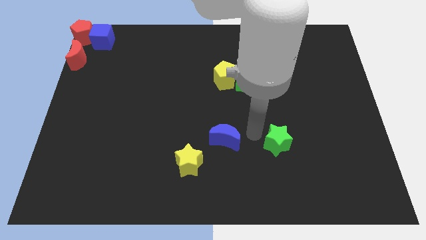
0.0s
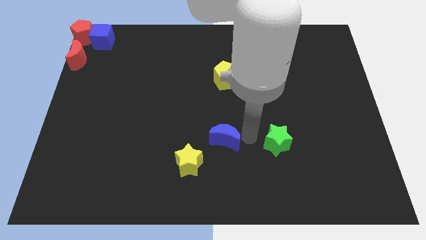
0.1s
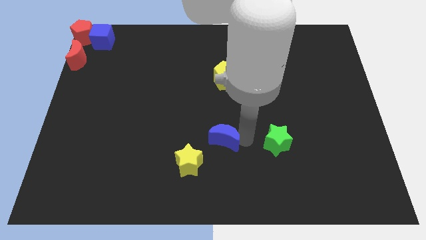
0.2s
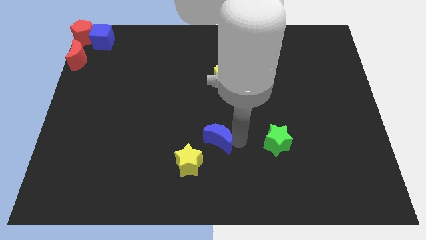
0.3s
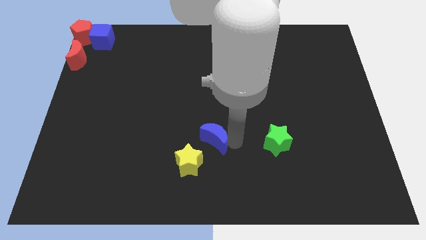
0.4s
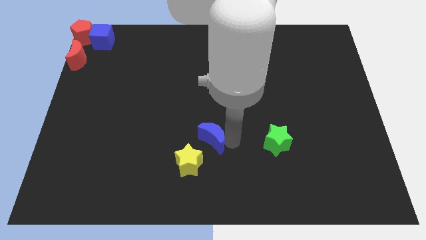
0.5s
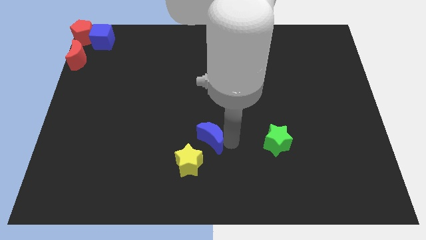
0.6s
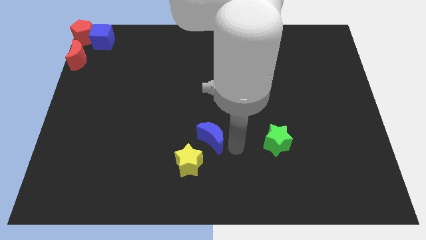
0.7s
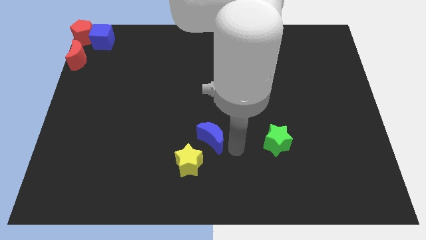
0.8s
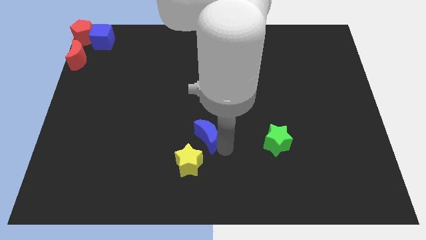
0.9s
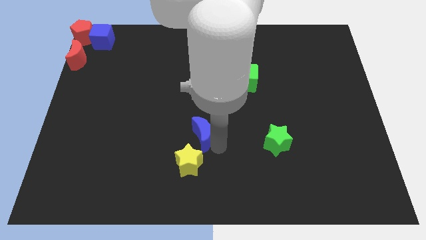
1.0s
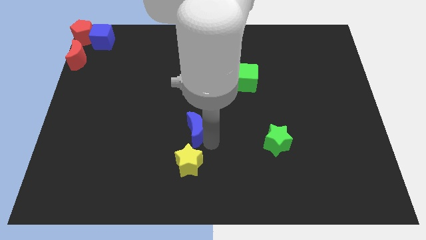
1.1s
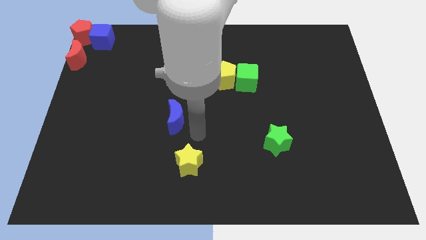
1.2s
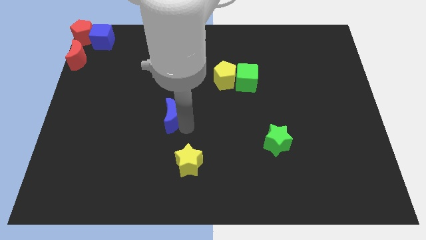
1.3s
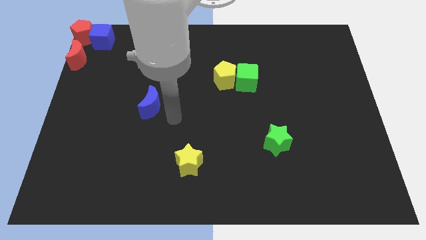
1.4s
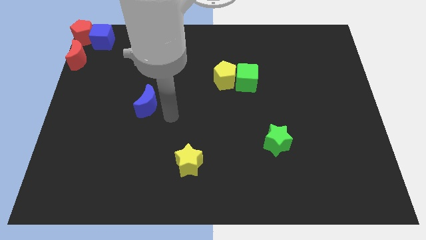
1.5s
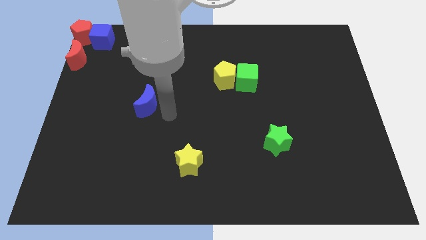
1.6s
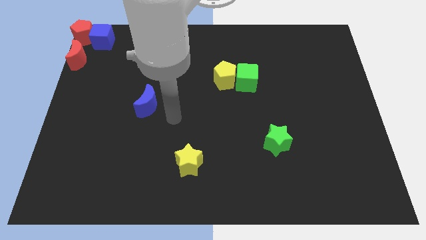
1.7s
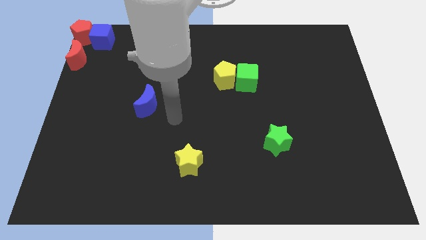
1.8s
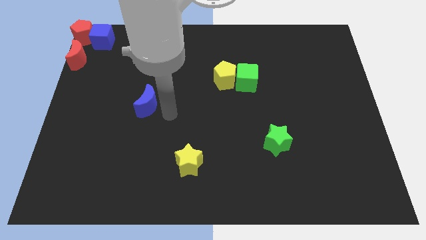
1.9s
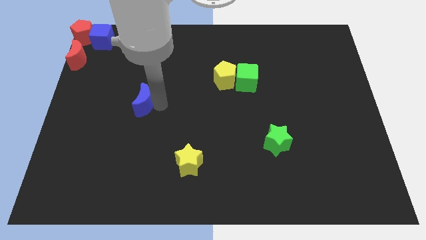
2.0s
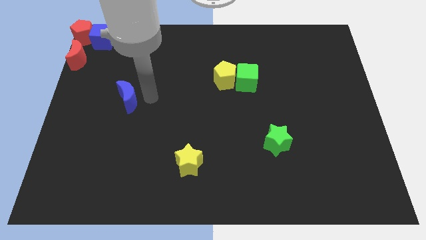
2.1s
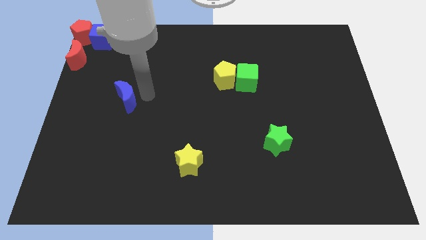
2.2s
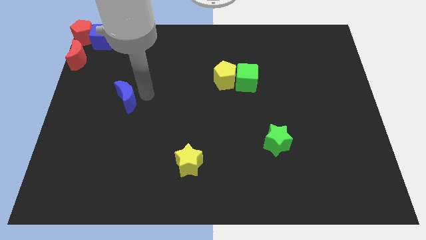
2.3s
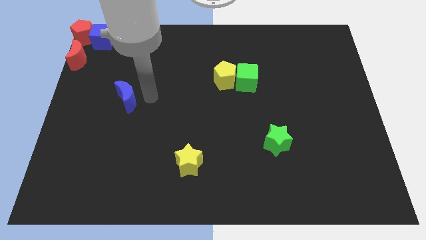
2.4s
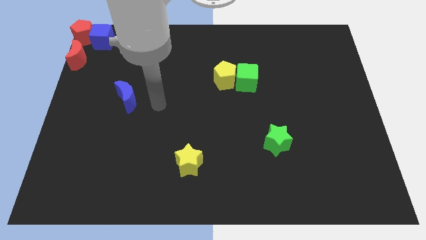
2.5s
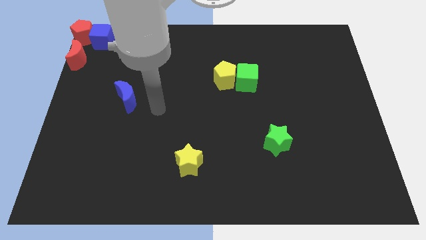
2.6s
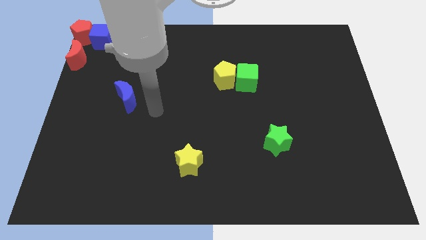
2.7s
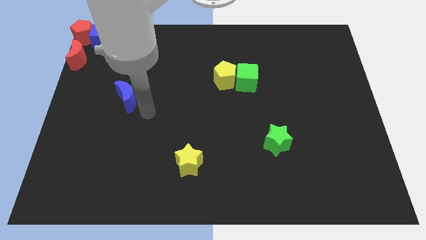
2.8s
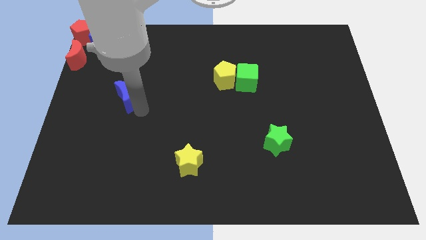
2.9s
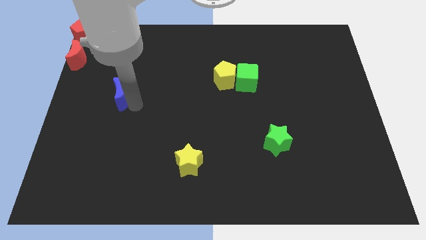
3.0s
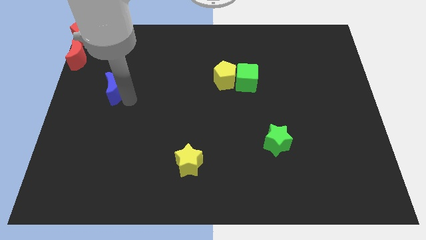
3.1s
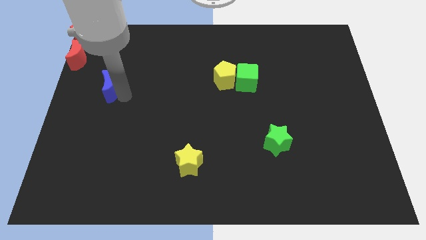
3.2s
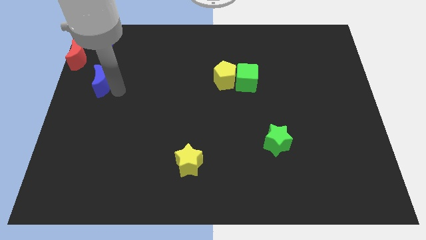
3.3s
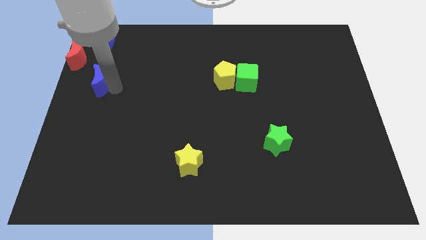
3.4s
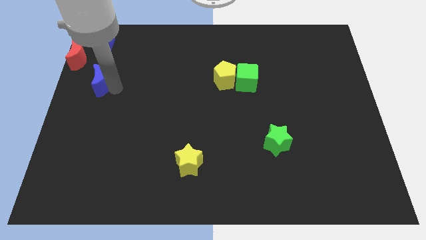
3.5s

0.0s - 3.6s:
place the blue moon at the bottom right of the red moon

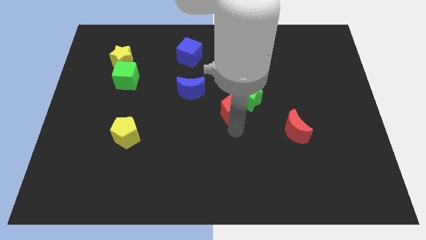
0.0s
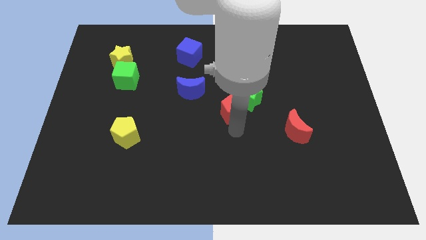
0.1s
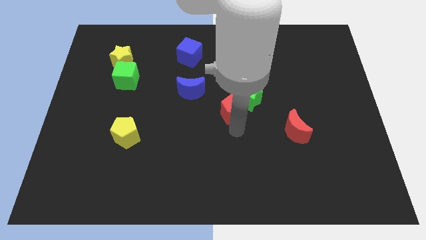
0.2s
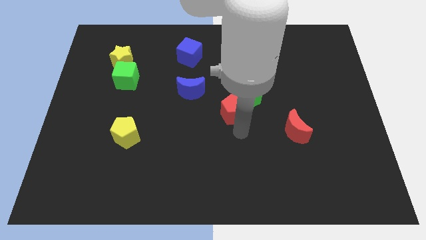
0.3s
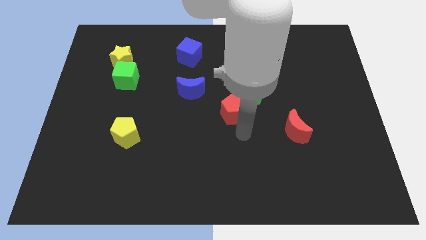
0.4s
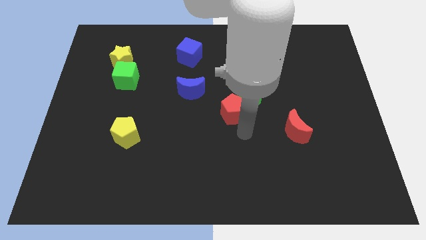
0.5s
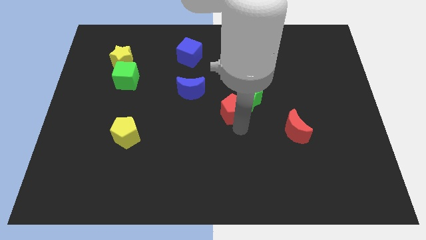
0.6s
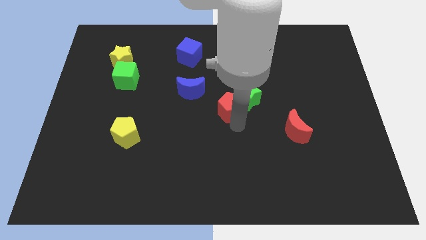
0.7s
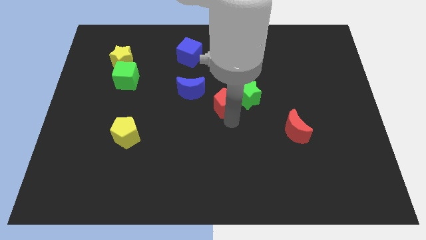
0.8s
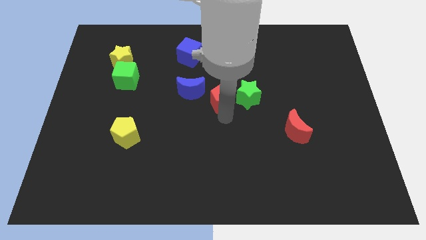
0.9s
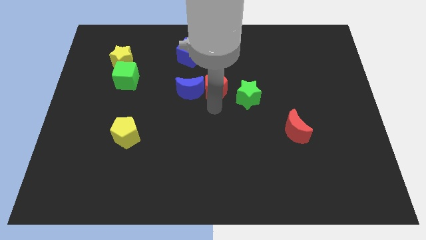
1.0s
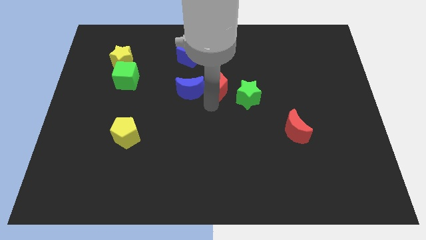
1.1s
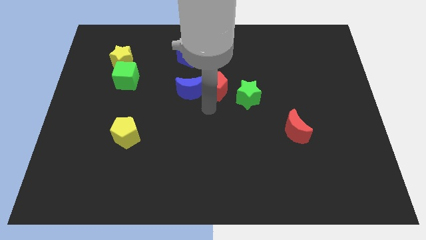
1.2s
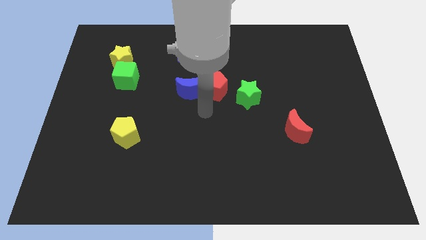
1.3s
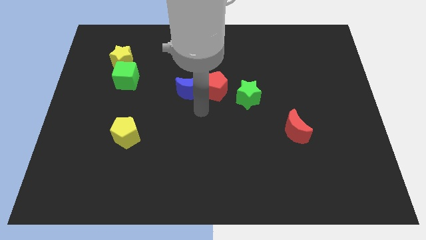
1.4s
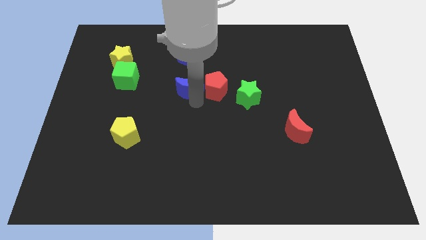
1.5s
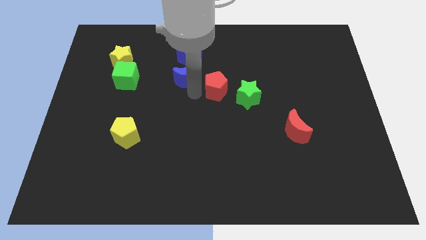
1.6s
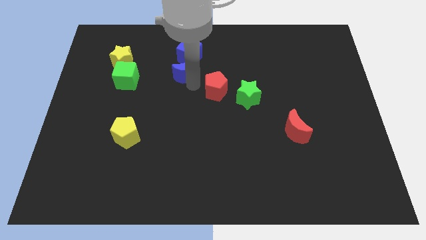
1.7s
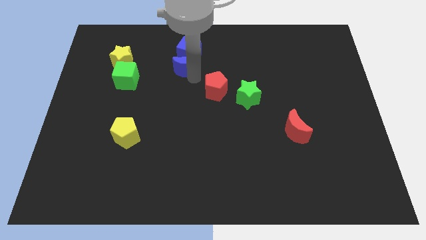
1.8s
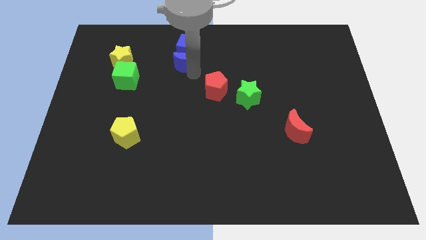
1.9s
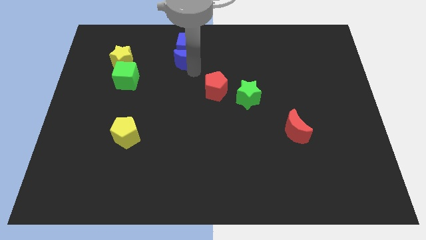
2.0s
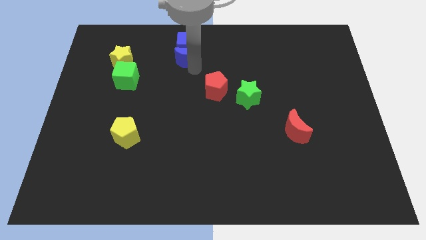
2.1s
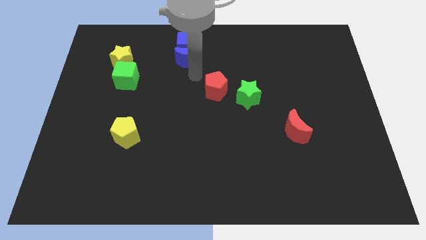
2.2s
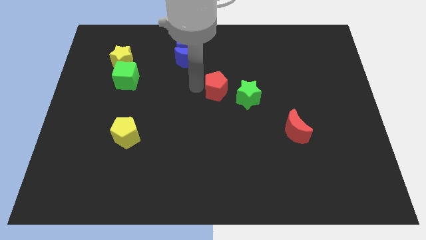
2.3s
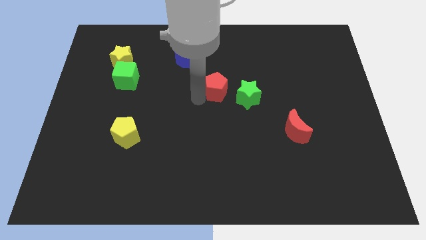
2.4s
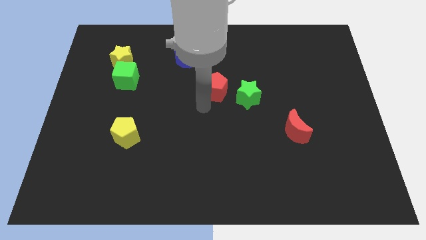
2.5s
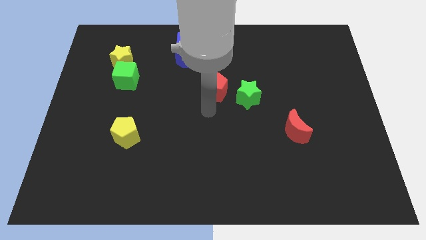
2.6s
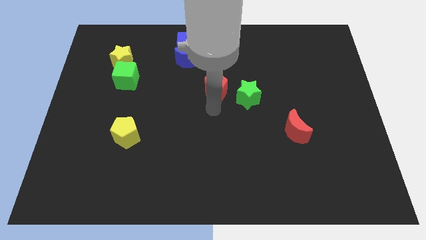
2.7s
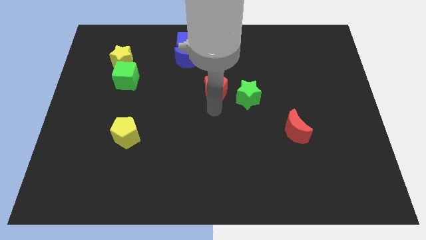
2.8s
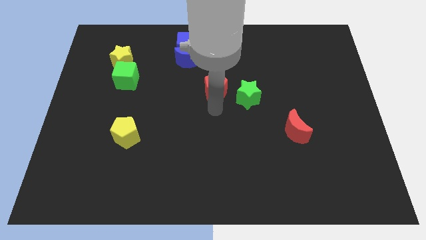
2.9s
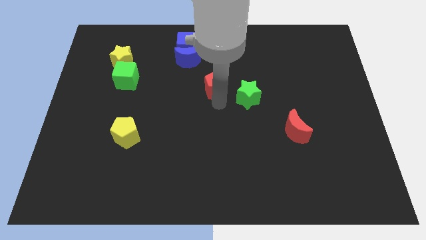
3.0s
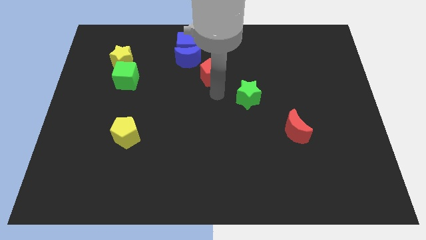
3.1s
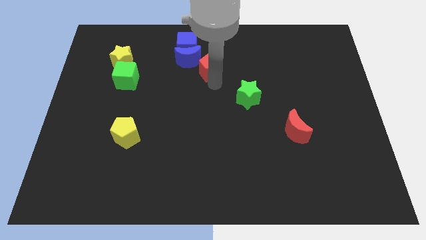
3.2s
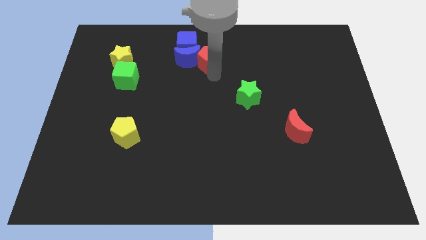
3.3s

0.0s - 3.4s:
move the blue blocks and red pentagon to the center top

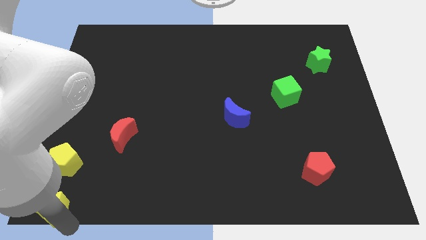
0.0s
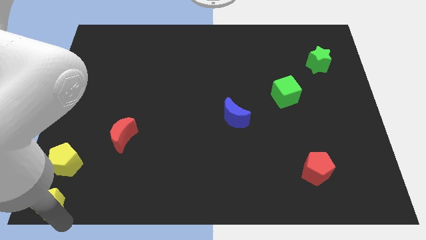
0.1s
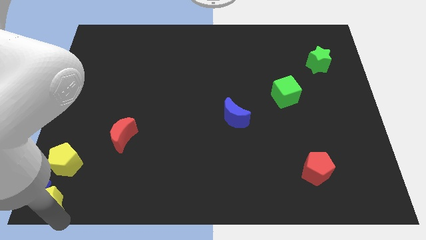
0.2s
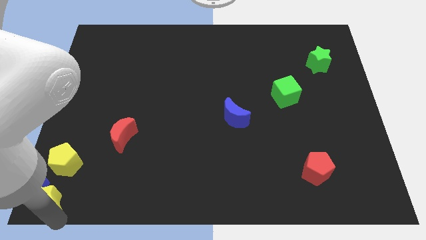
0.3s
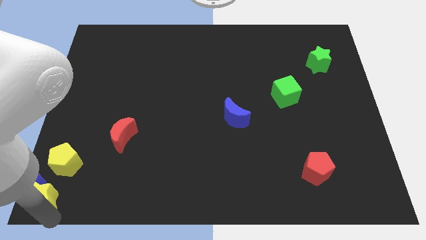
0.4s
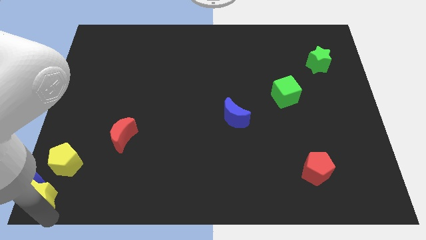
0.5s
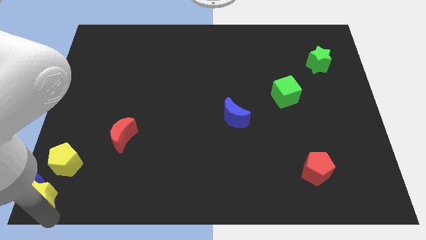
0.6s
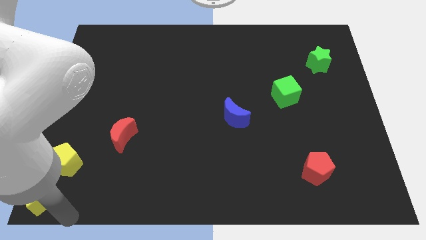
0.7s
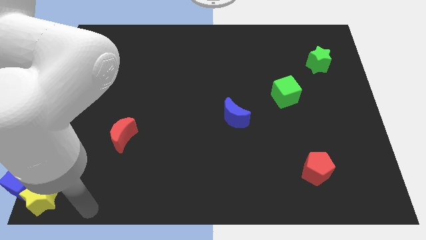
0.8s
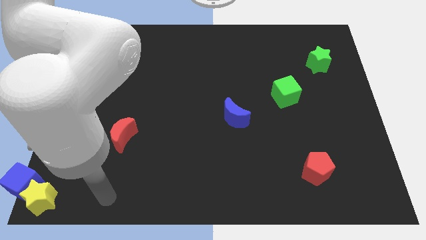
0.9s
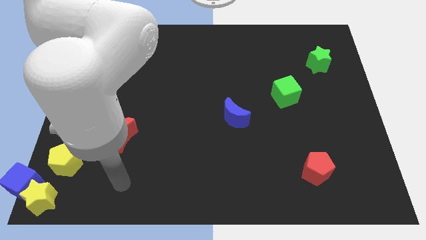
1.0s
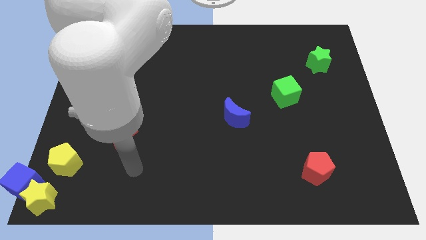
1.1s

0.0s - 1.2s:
push yellow star in to blue cube

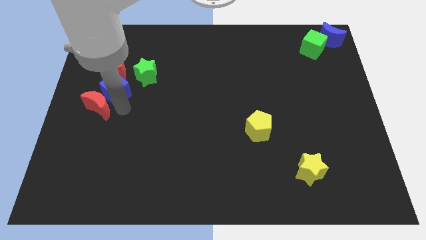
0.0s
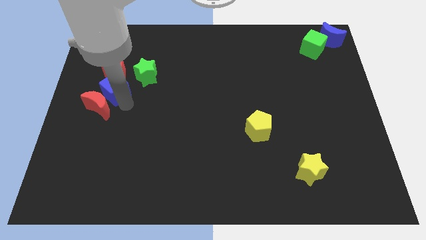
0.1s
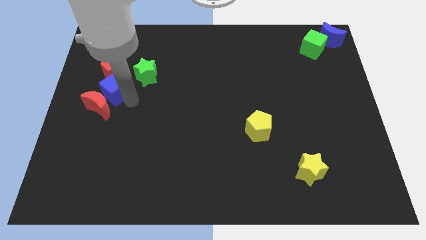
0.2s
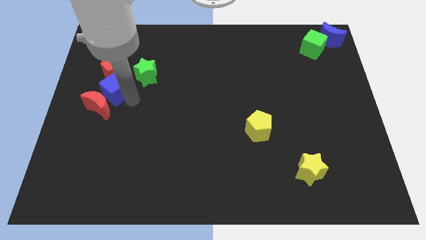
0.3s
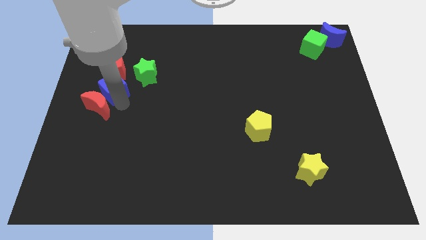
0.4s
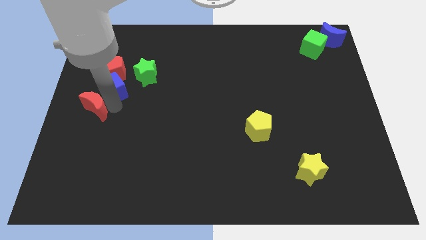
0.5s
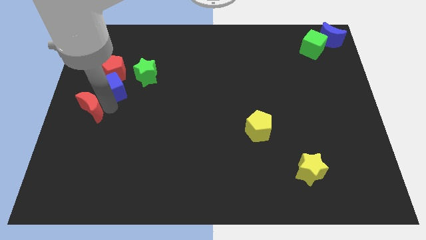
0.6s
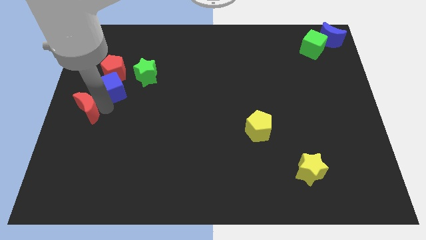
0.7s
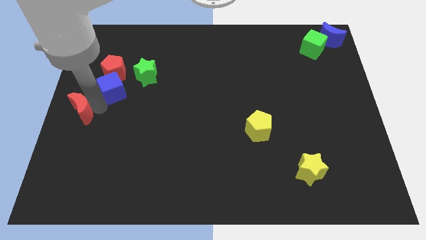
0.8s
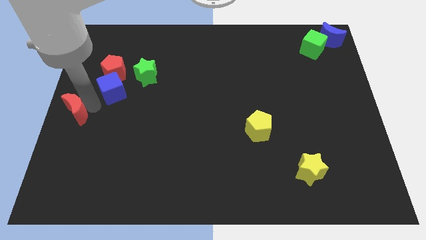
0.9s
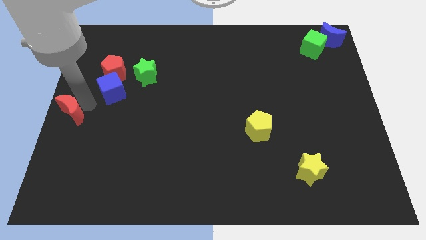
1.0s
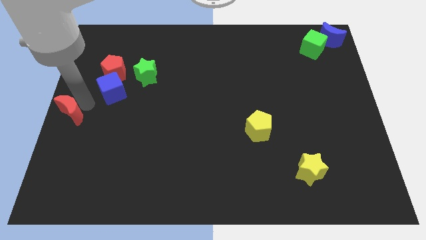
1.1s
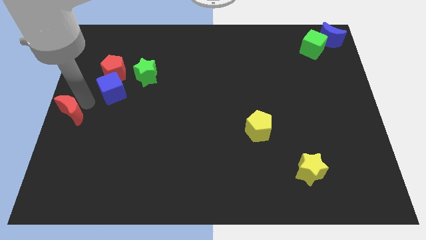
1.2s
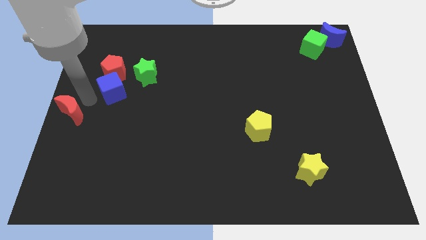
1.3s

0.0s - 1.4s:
separate the red moon from the blue cube
